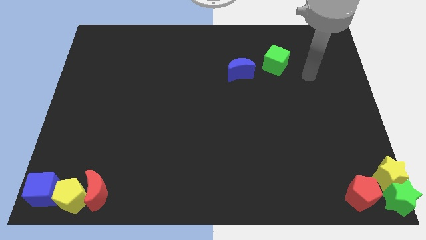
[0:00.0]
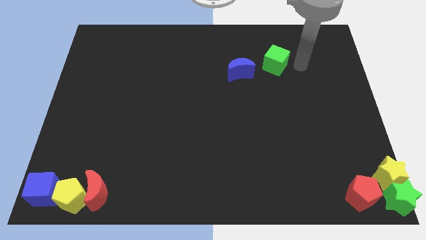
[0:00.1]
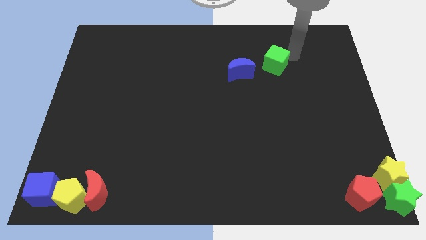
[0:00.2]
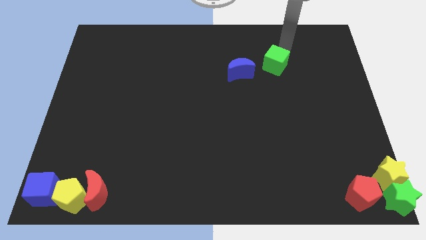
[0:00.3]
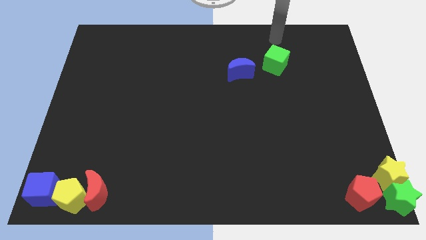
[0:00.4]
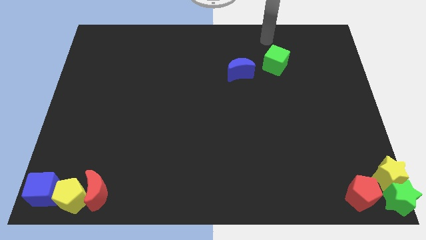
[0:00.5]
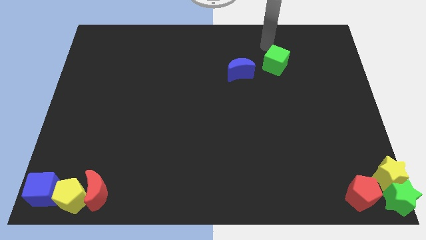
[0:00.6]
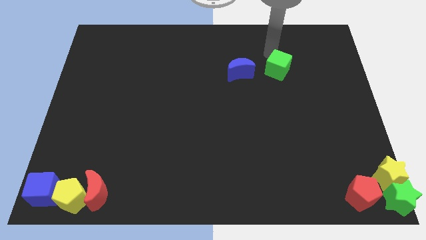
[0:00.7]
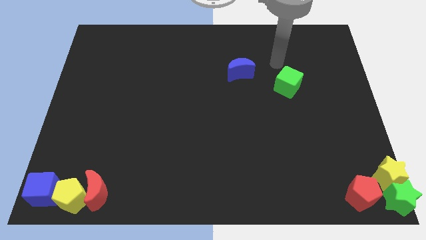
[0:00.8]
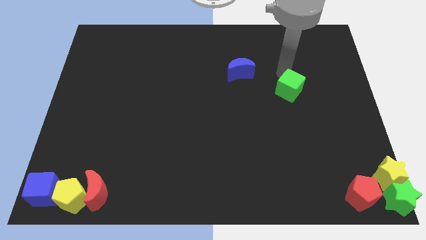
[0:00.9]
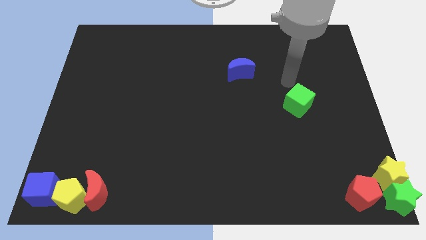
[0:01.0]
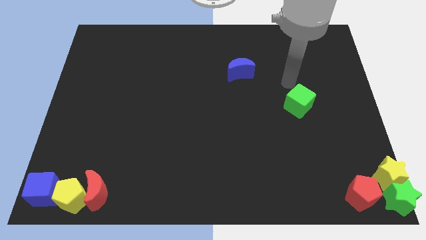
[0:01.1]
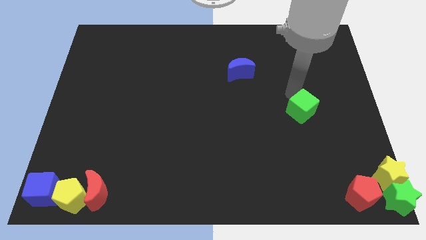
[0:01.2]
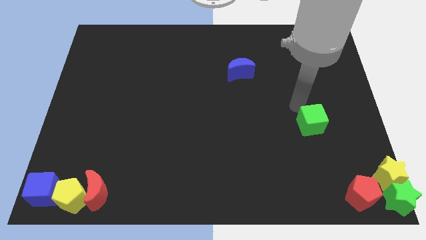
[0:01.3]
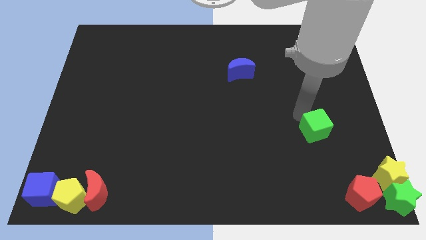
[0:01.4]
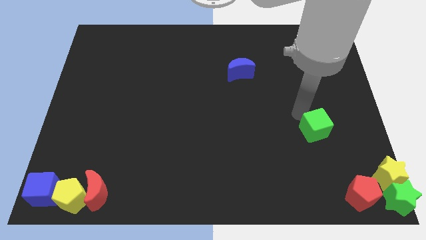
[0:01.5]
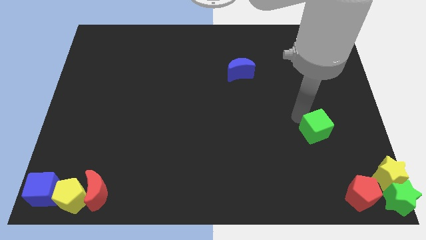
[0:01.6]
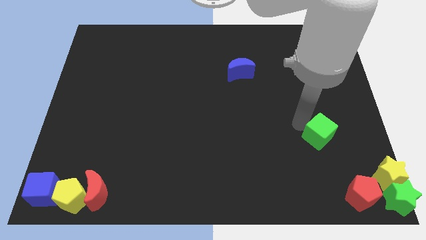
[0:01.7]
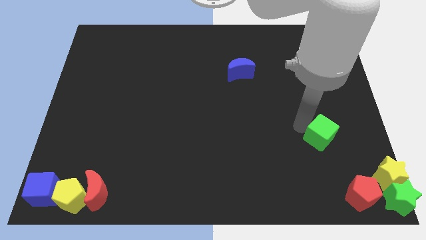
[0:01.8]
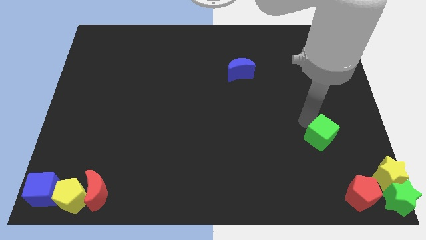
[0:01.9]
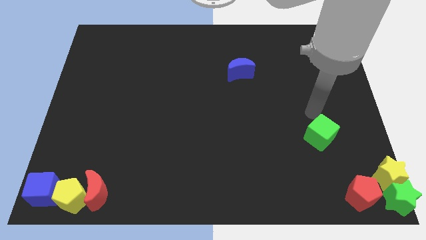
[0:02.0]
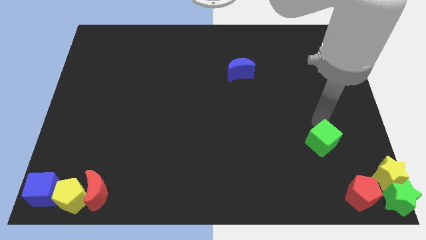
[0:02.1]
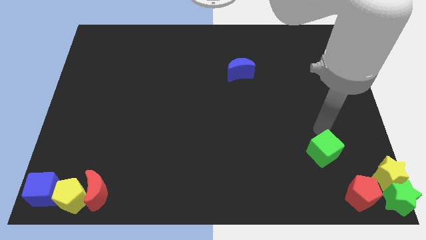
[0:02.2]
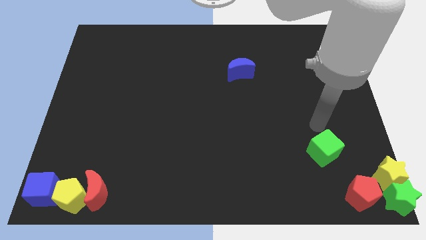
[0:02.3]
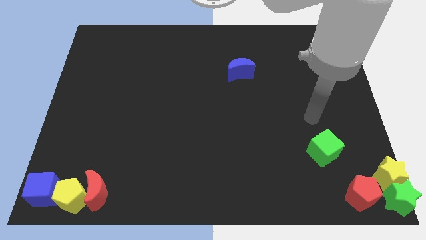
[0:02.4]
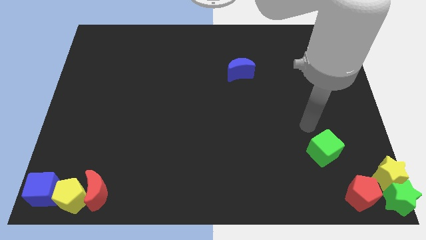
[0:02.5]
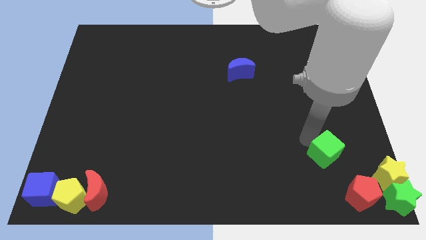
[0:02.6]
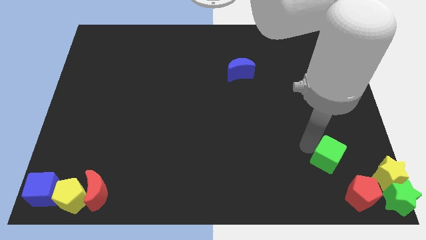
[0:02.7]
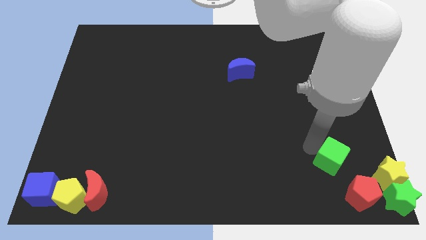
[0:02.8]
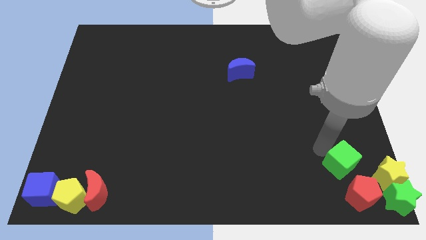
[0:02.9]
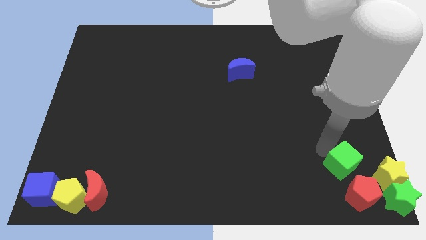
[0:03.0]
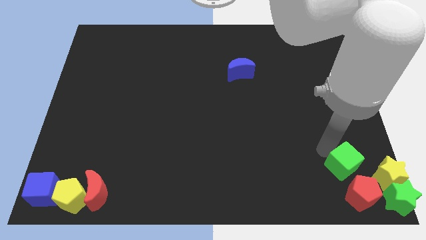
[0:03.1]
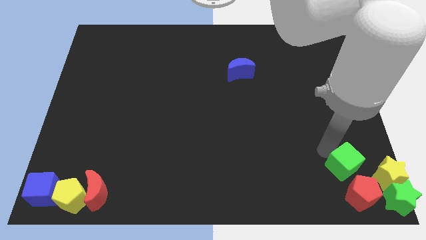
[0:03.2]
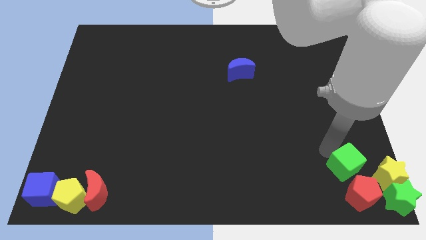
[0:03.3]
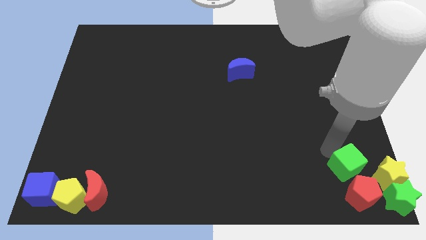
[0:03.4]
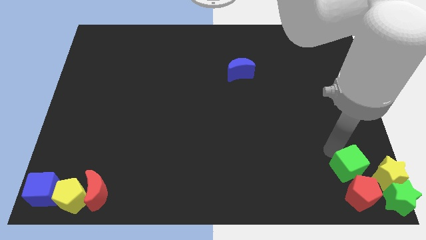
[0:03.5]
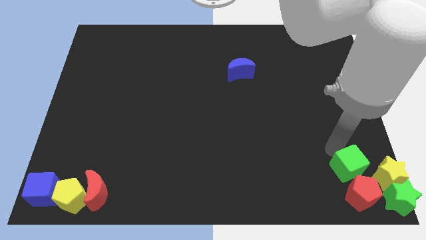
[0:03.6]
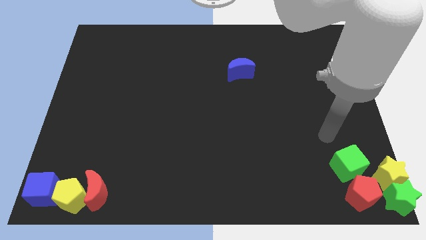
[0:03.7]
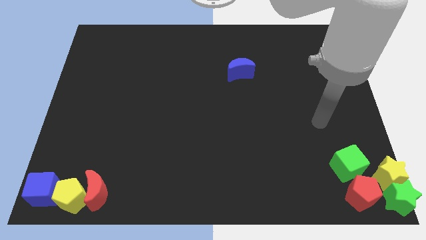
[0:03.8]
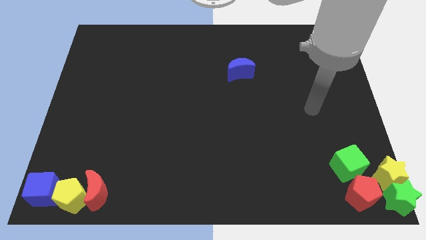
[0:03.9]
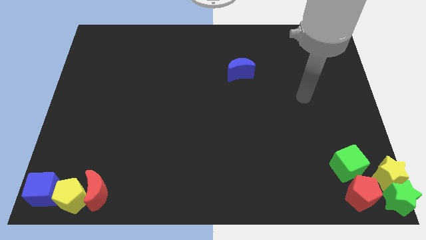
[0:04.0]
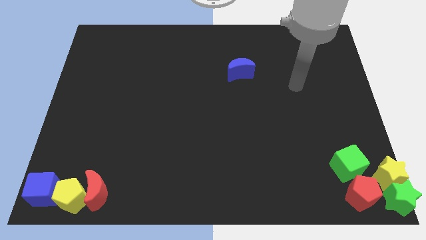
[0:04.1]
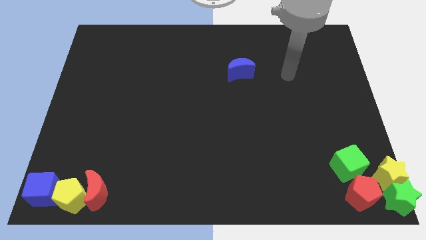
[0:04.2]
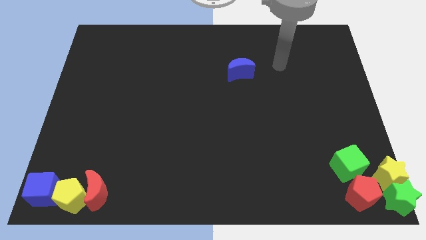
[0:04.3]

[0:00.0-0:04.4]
move green cube left beside the yellow star

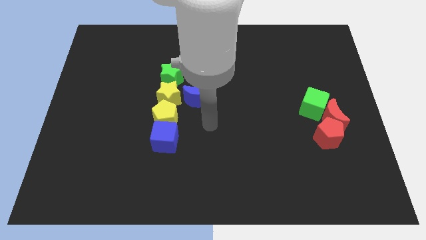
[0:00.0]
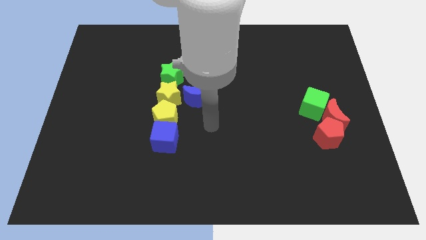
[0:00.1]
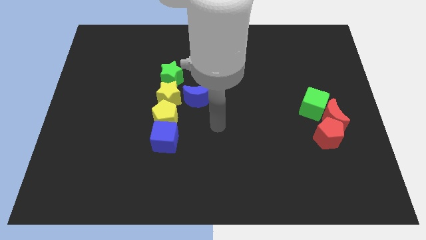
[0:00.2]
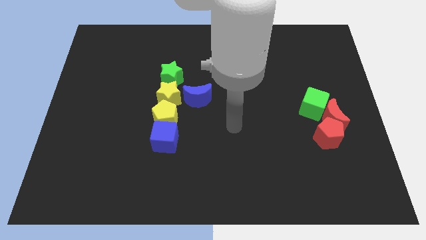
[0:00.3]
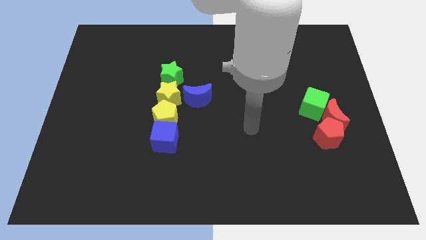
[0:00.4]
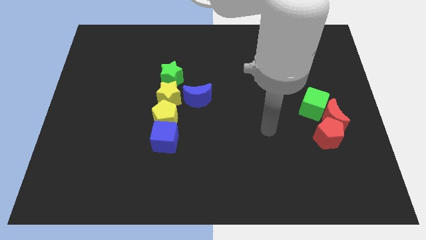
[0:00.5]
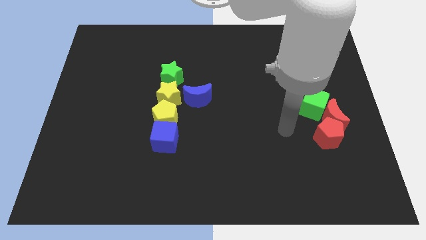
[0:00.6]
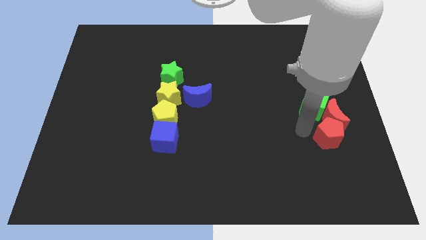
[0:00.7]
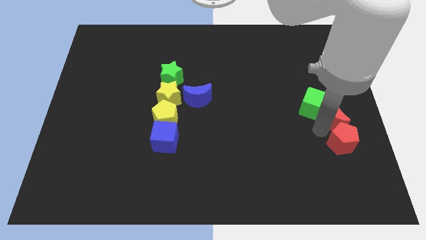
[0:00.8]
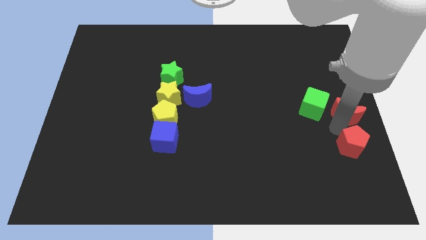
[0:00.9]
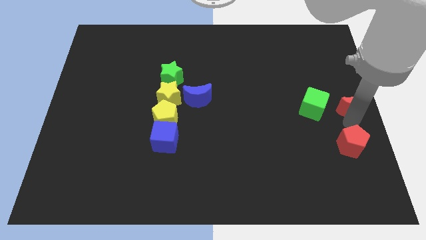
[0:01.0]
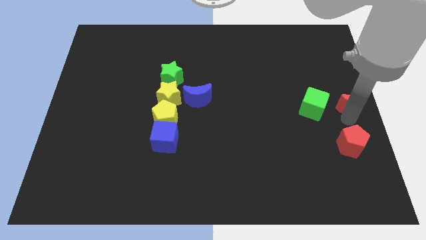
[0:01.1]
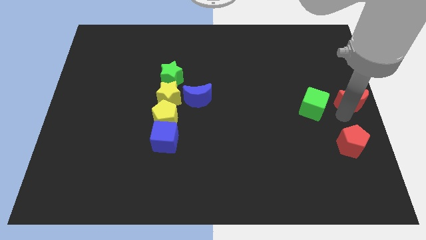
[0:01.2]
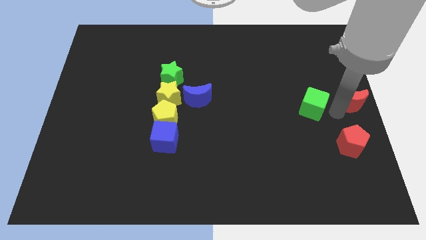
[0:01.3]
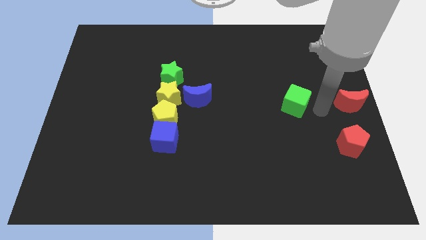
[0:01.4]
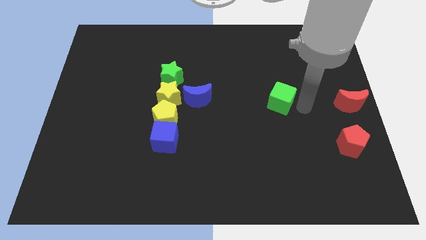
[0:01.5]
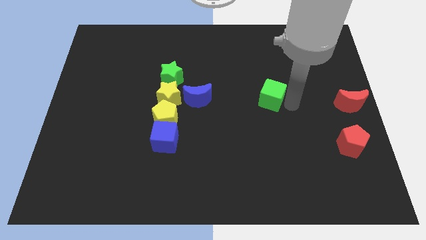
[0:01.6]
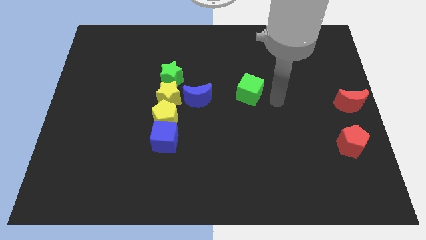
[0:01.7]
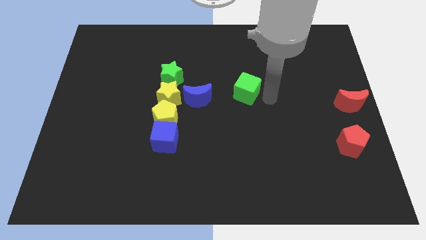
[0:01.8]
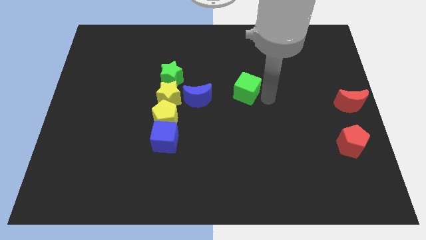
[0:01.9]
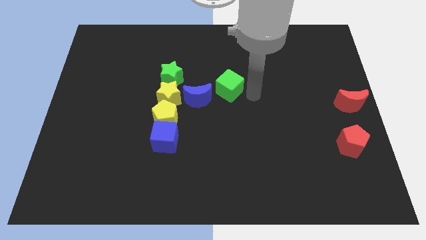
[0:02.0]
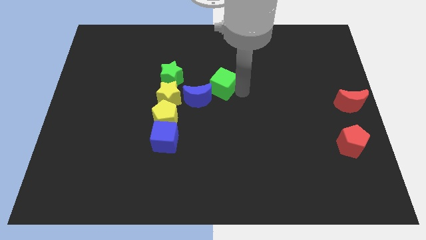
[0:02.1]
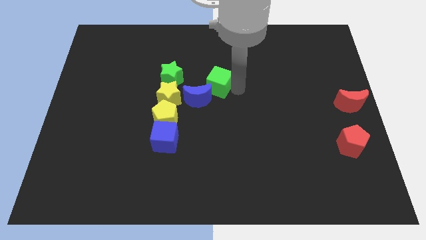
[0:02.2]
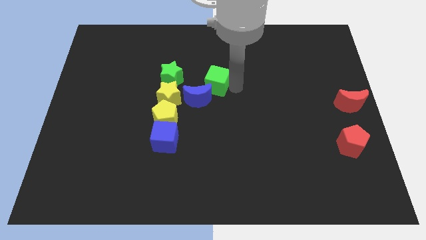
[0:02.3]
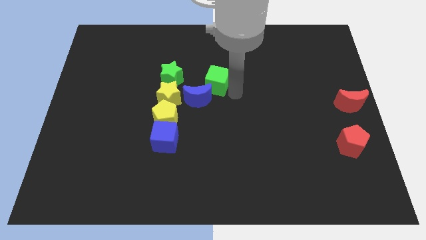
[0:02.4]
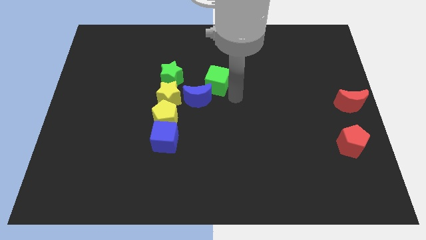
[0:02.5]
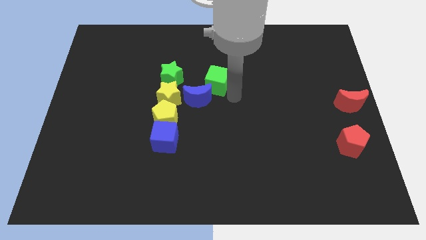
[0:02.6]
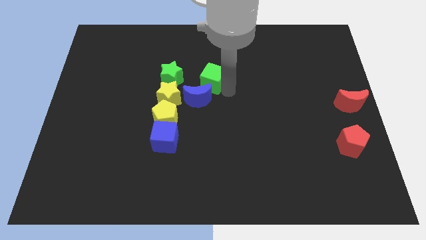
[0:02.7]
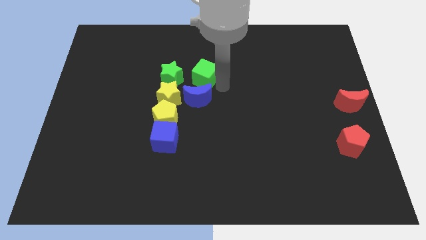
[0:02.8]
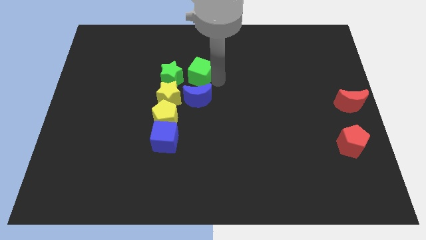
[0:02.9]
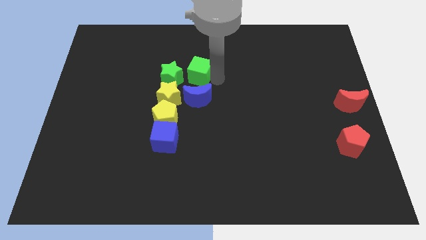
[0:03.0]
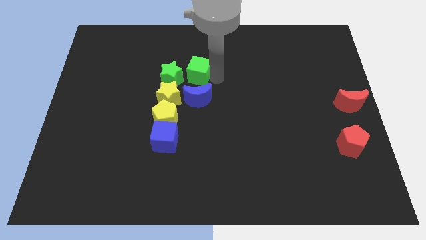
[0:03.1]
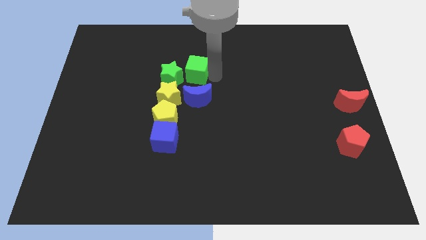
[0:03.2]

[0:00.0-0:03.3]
place the green cube above the blue moon

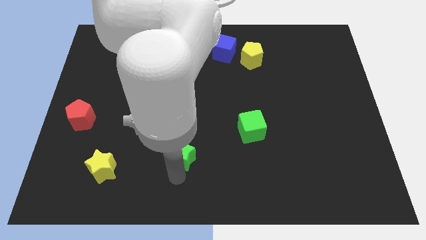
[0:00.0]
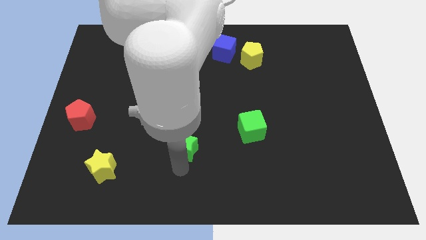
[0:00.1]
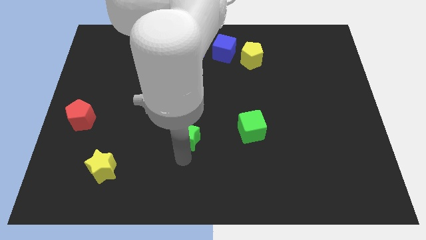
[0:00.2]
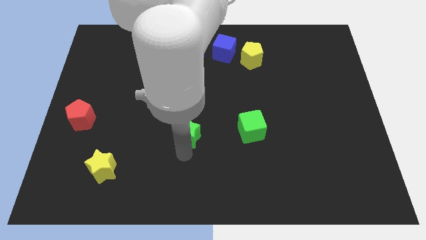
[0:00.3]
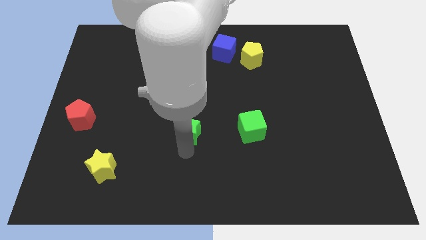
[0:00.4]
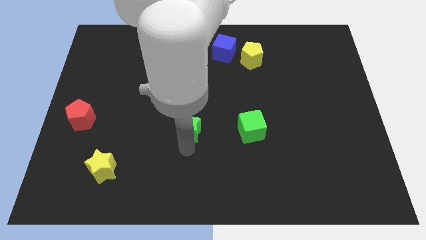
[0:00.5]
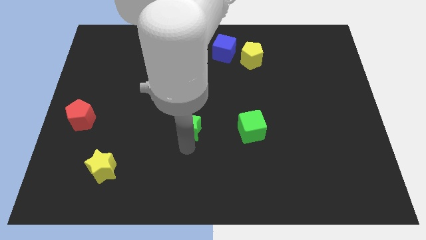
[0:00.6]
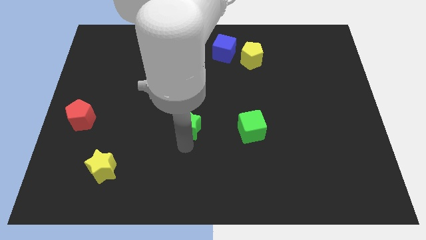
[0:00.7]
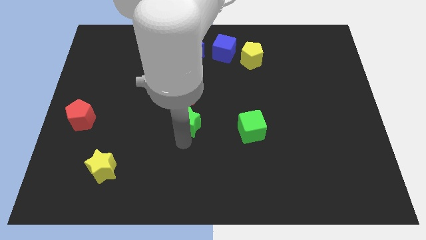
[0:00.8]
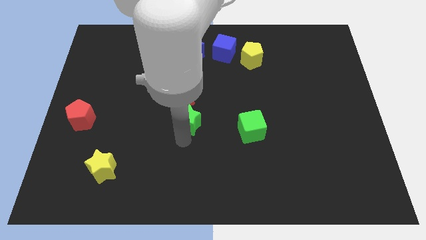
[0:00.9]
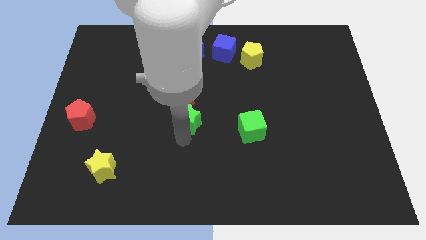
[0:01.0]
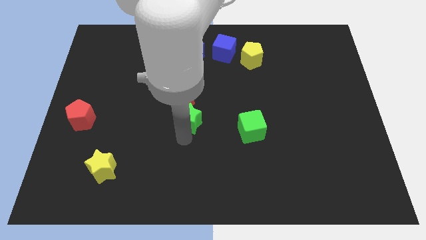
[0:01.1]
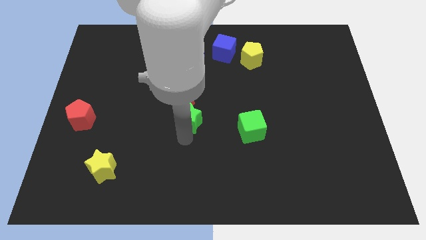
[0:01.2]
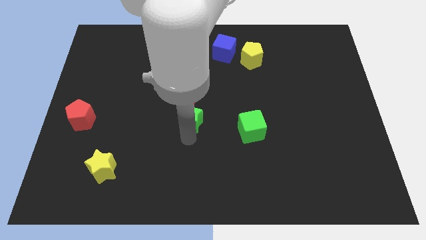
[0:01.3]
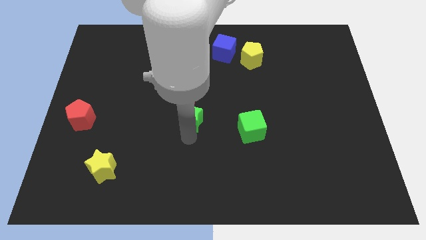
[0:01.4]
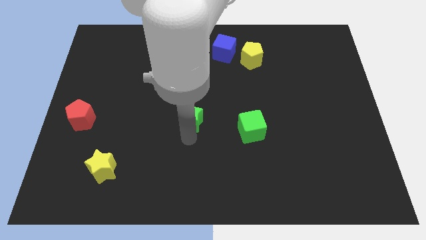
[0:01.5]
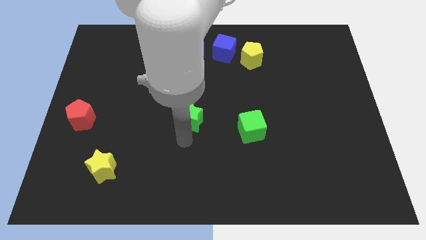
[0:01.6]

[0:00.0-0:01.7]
push green star below red crescent
